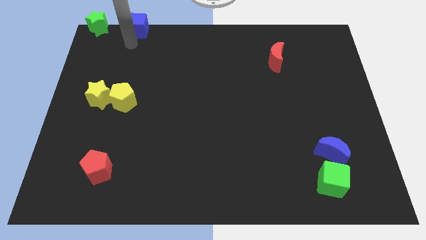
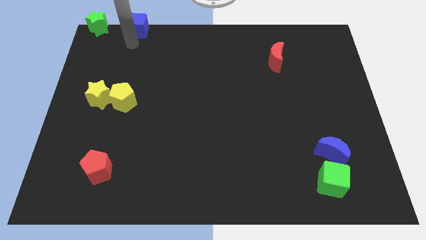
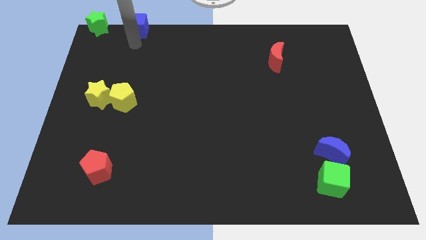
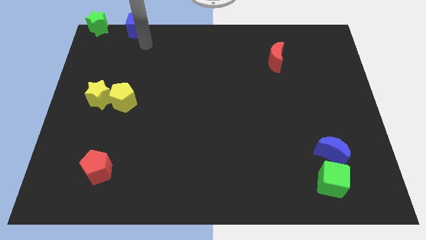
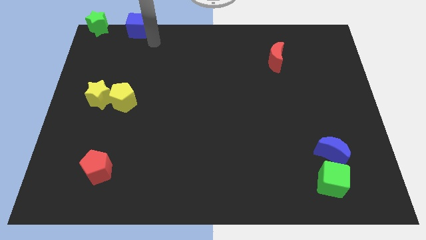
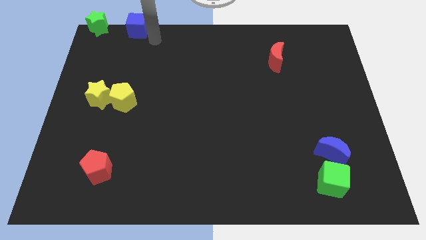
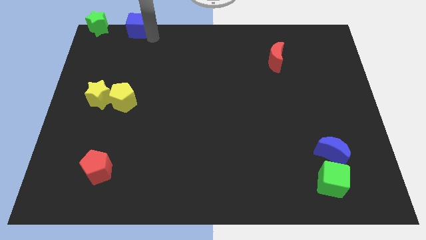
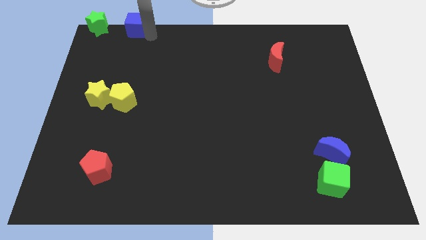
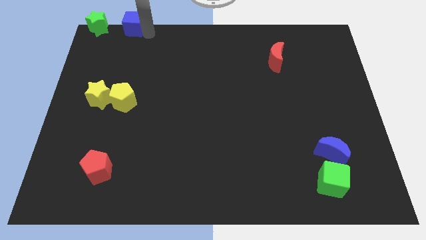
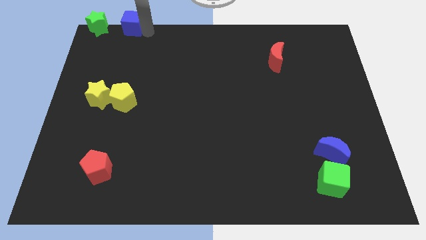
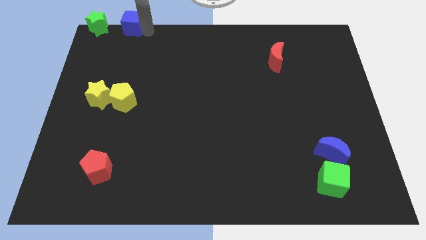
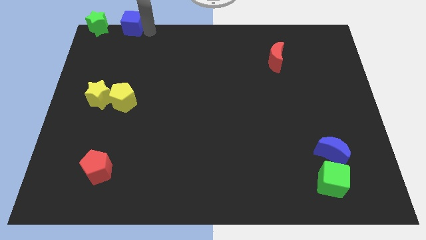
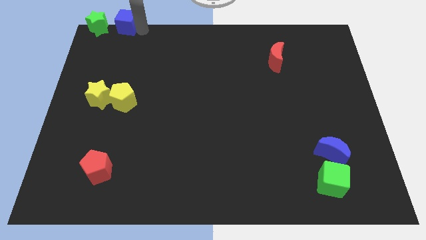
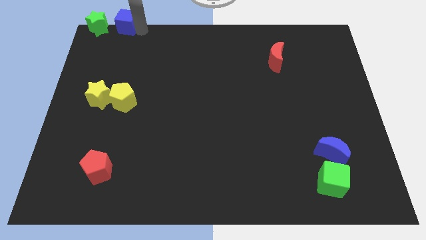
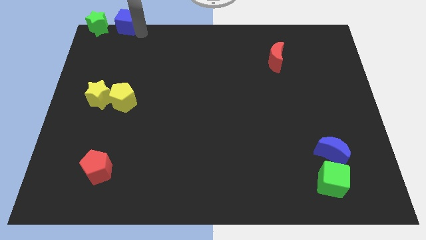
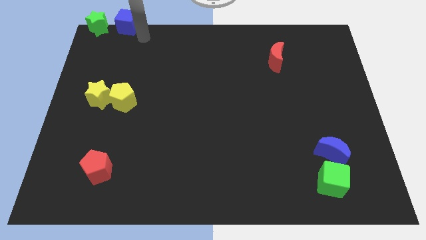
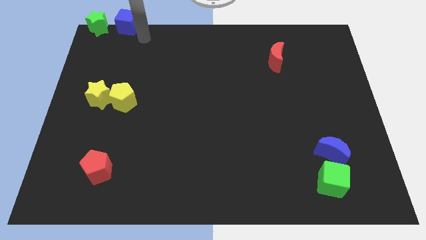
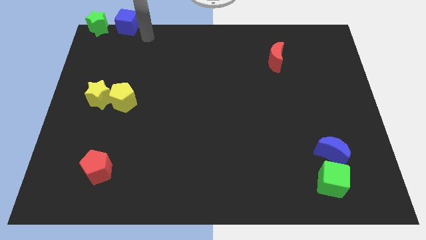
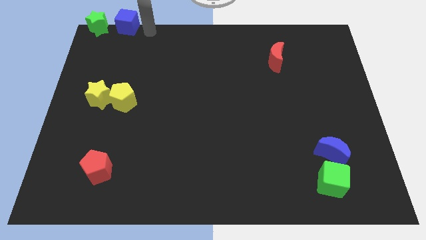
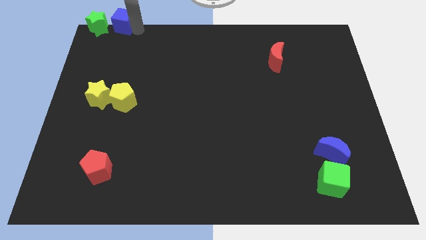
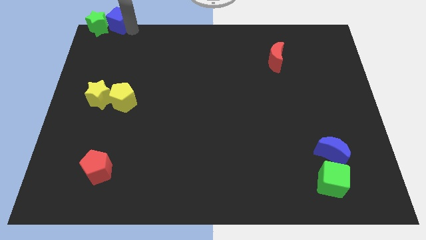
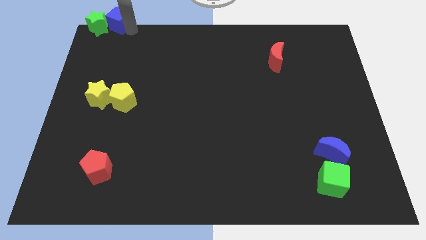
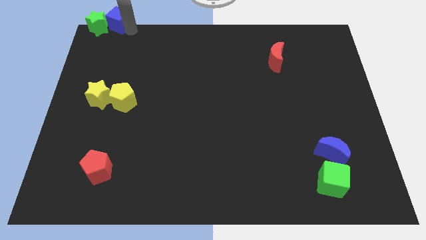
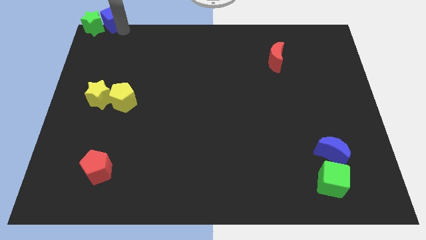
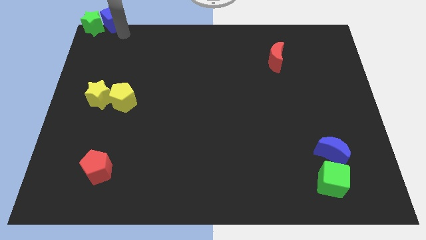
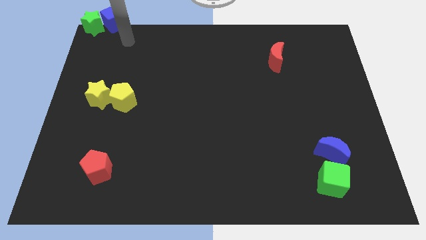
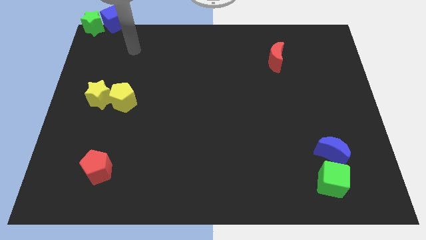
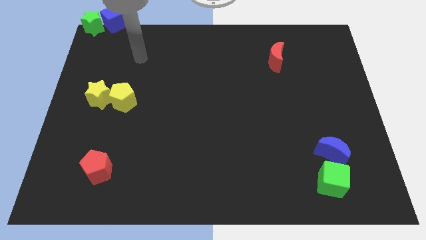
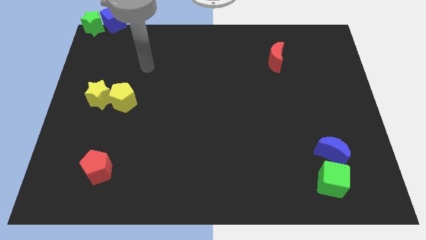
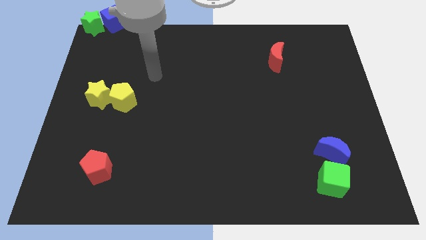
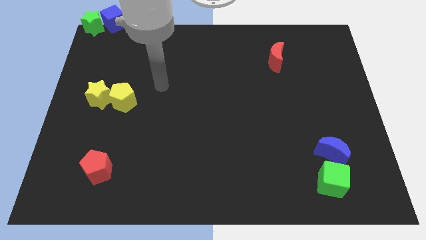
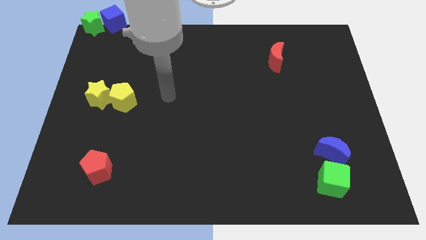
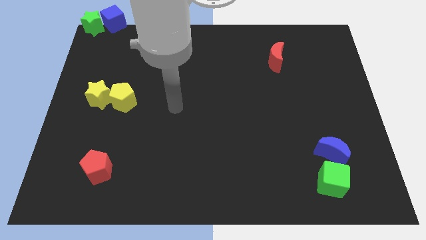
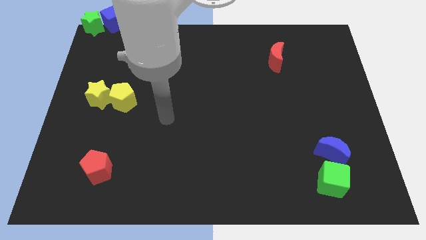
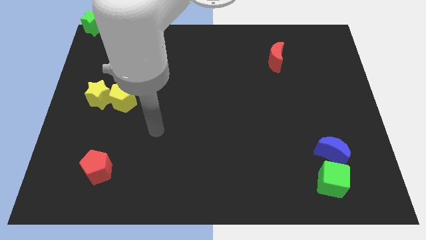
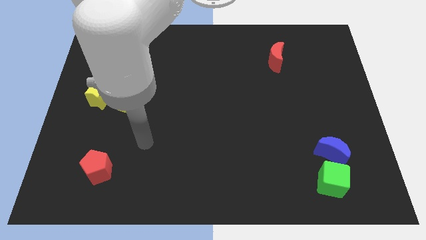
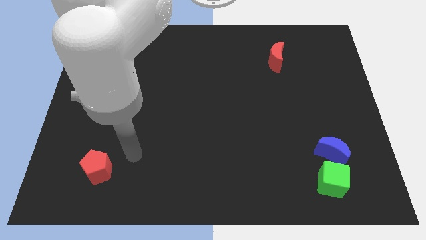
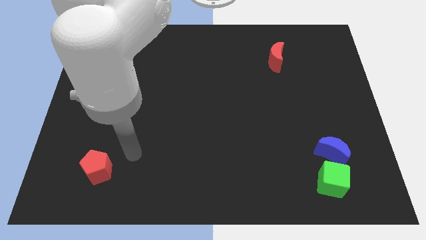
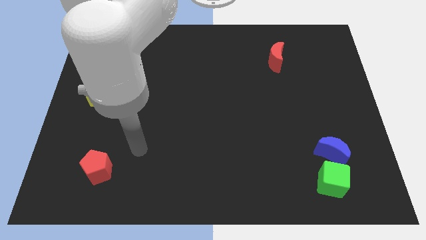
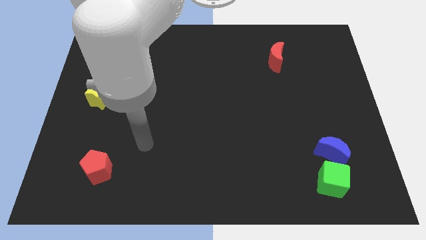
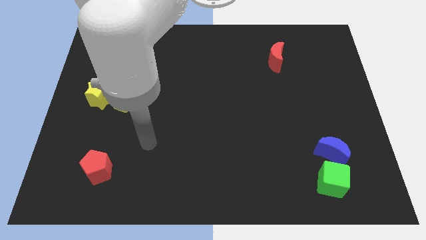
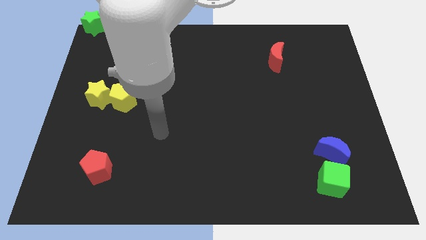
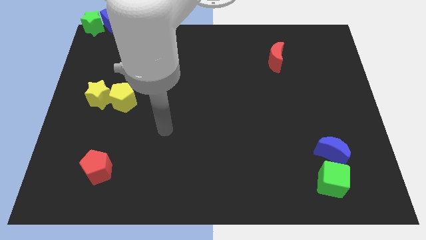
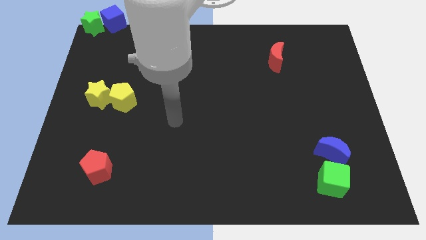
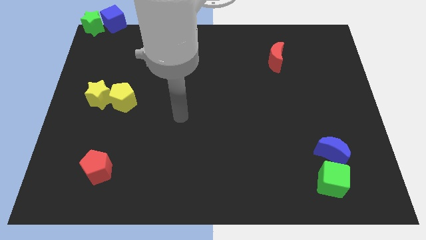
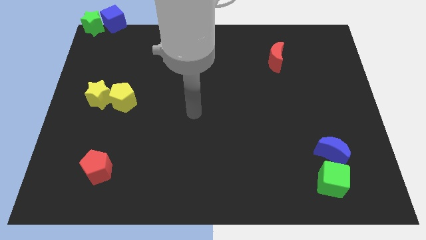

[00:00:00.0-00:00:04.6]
move the green star with the blue cube to the top left corner

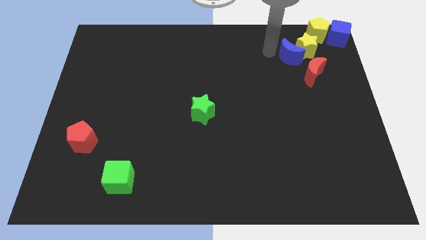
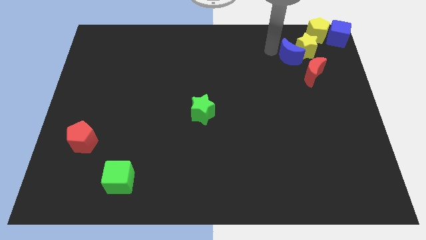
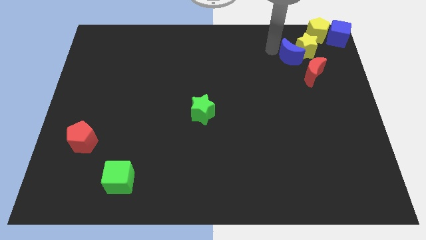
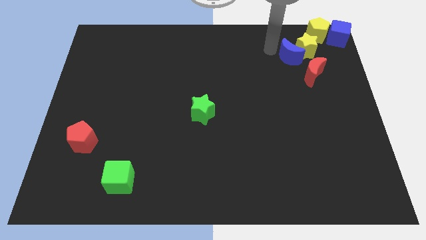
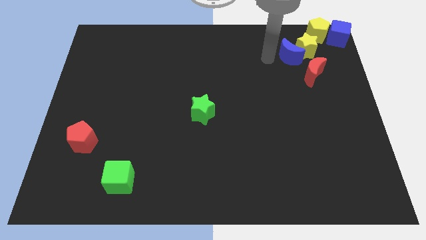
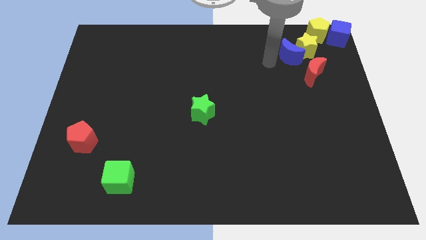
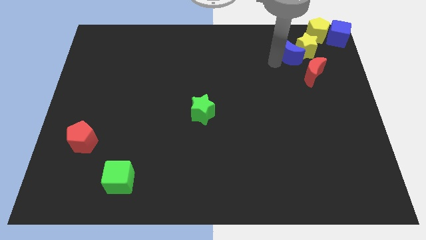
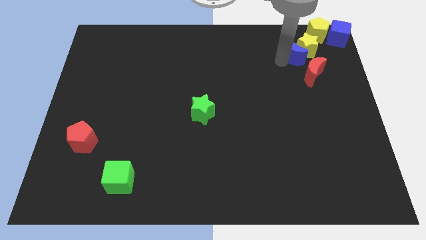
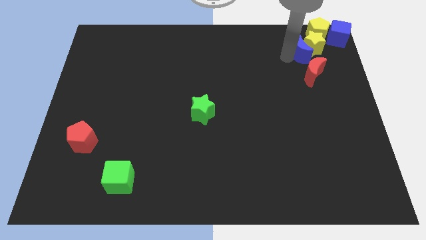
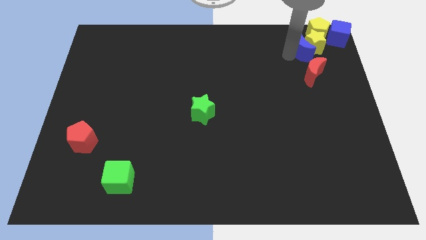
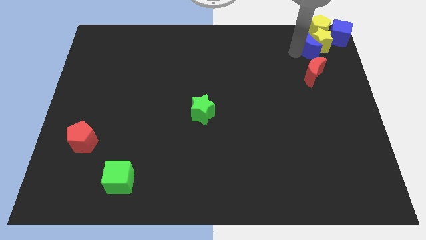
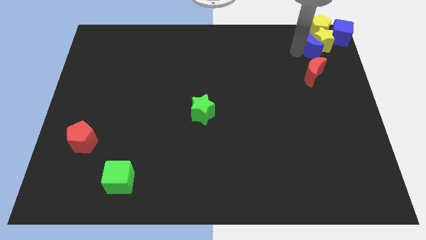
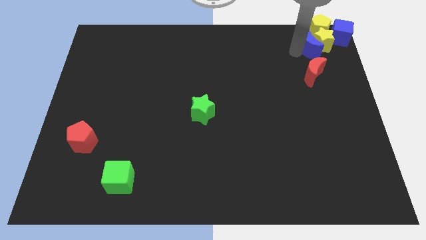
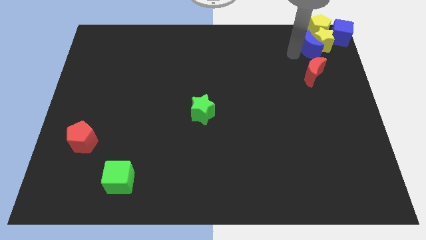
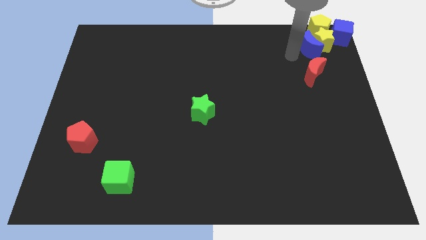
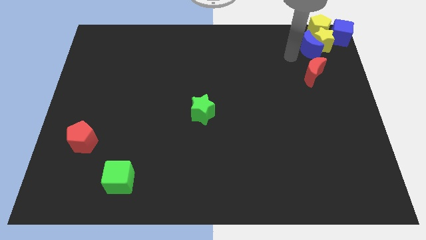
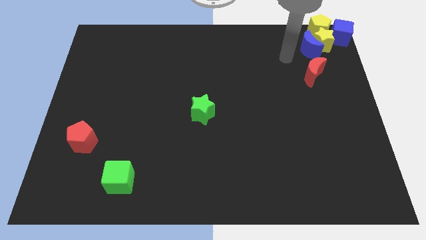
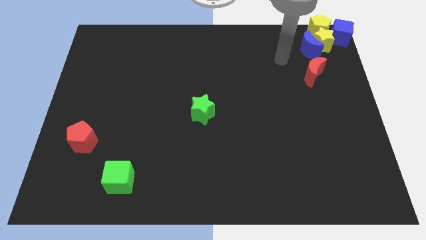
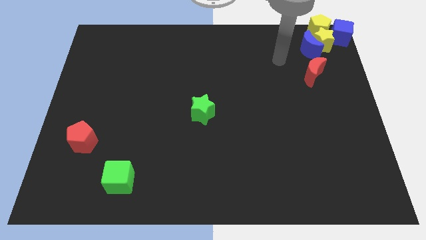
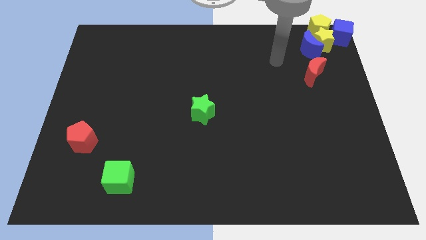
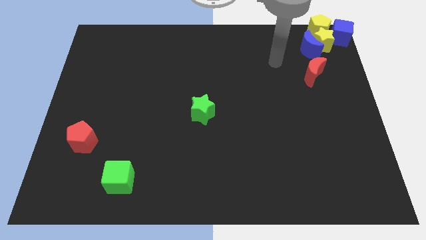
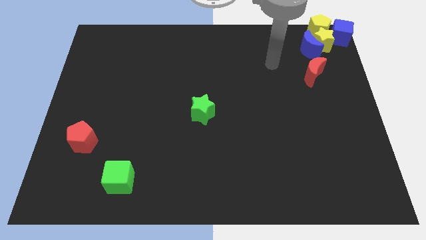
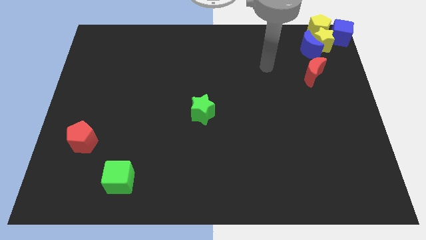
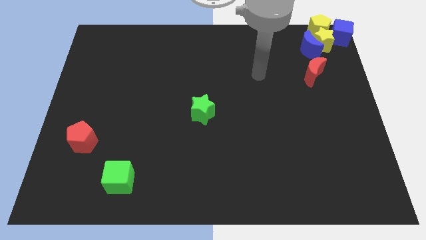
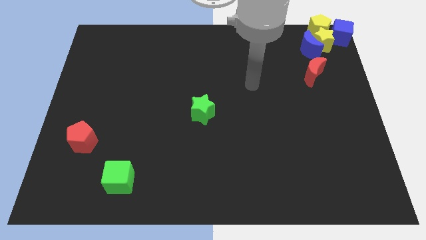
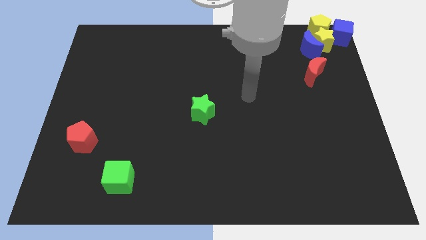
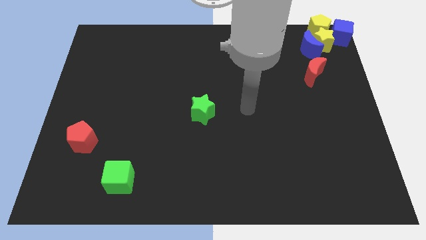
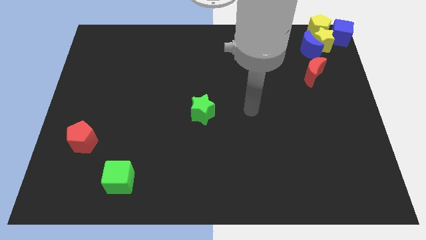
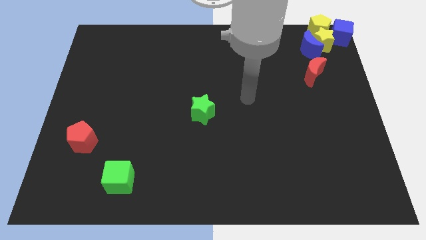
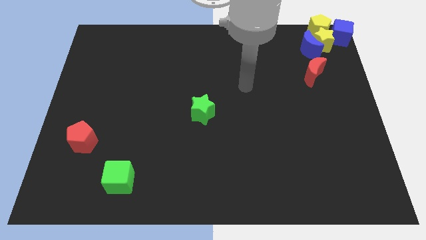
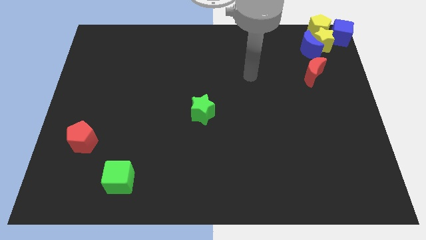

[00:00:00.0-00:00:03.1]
push blue moon in to yellow blocks

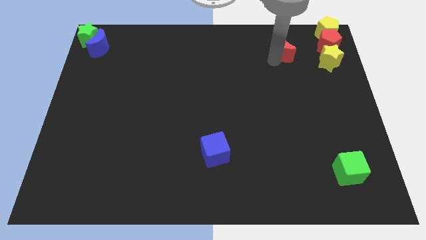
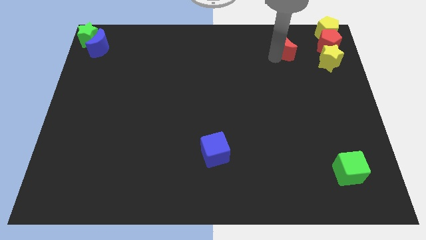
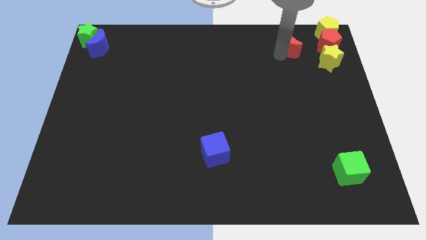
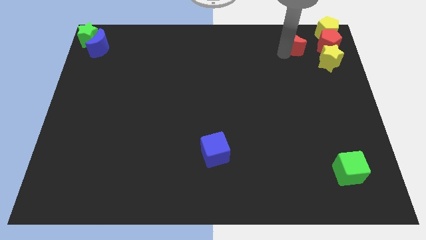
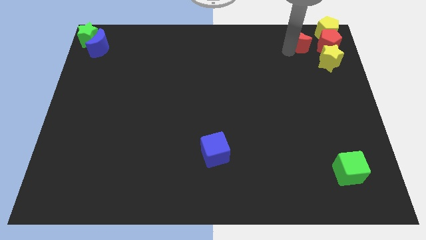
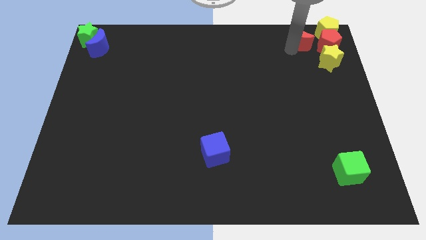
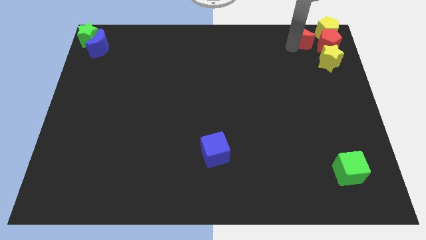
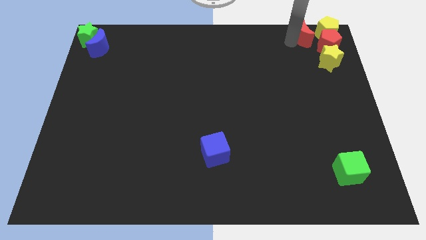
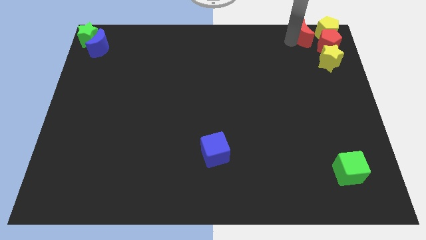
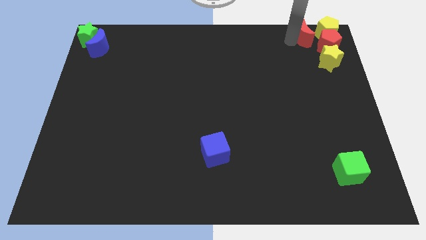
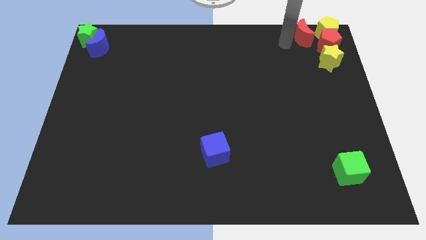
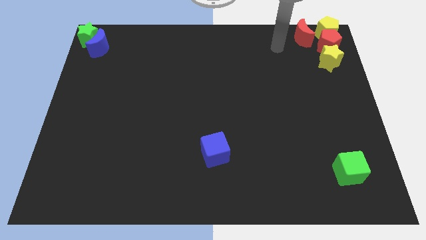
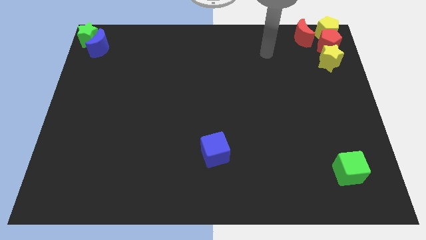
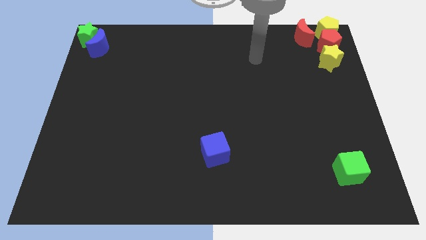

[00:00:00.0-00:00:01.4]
push the red crescent left to the yellow pentagon
